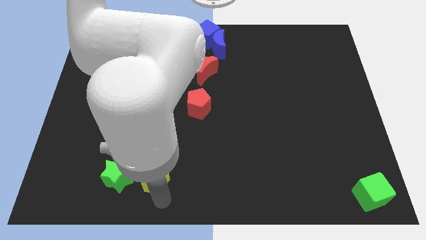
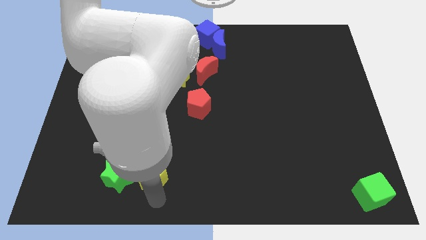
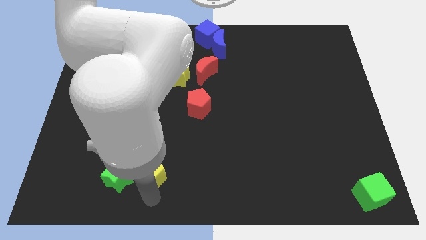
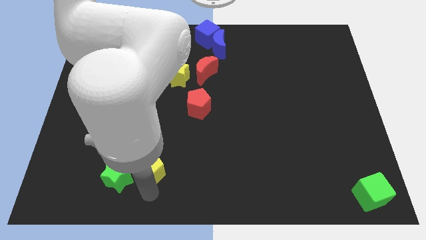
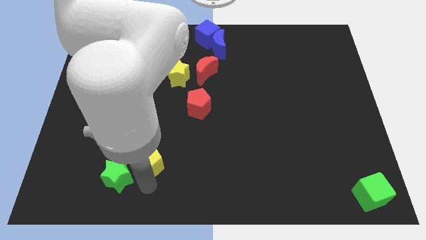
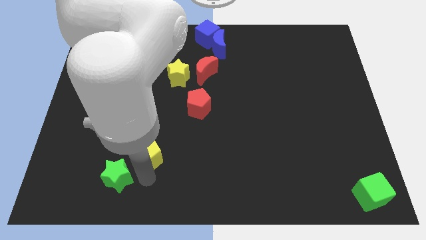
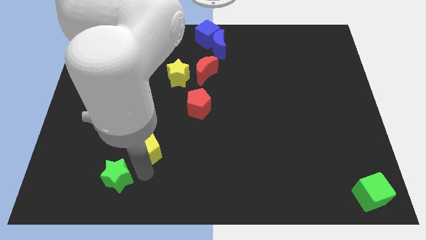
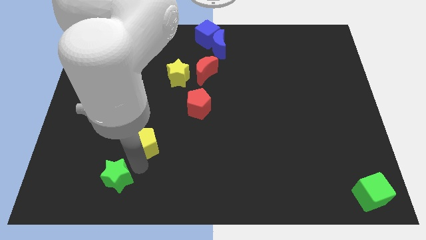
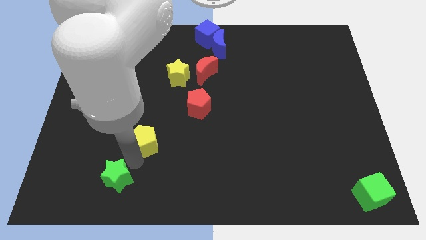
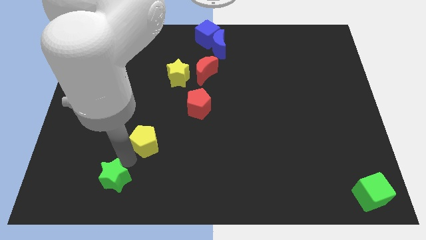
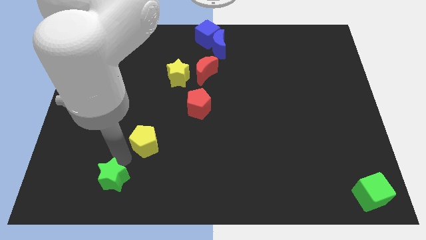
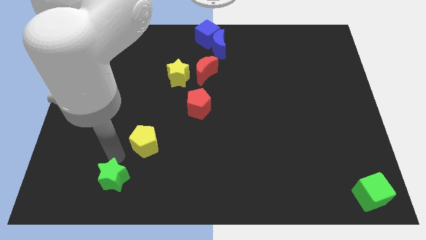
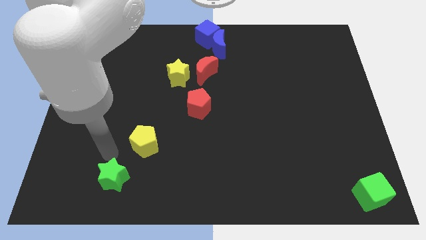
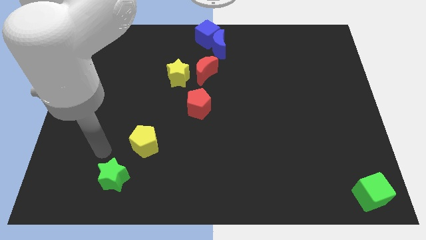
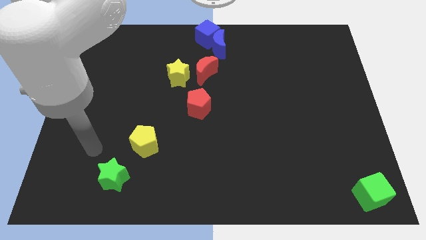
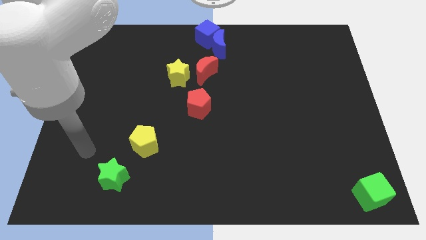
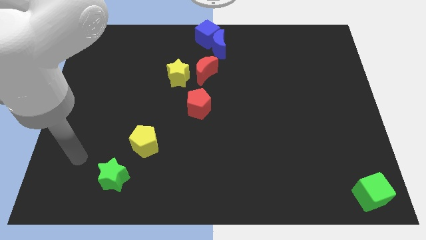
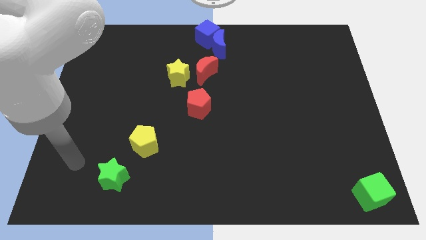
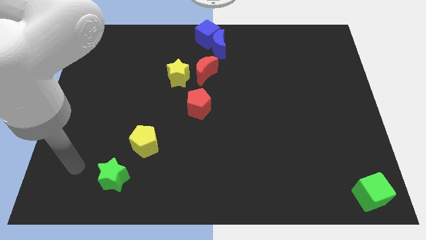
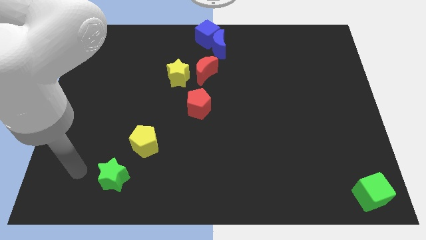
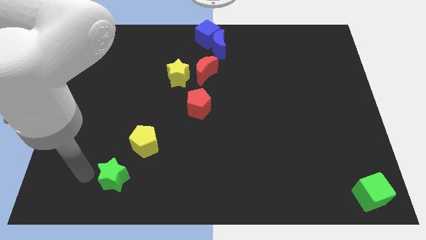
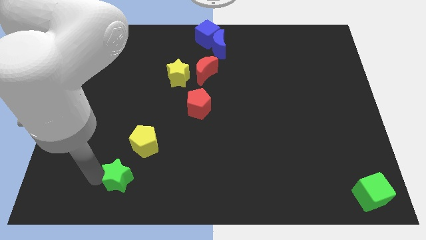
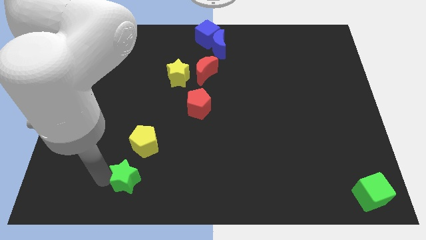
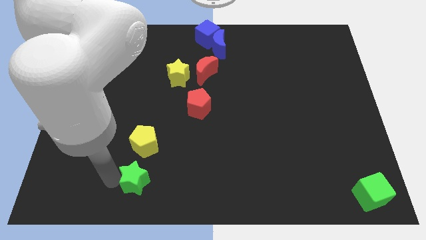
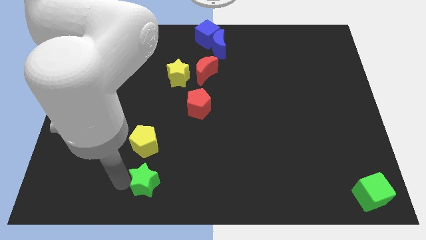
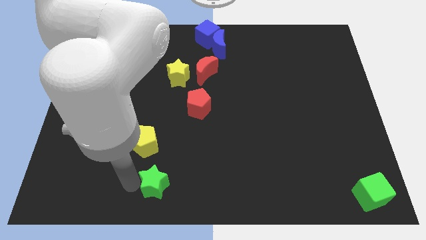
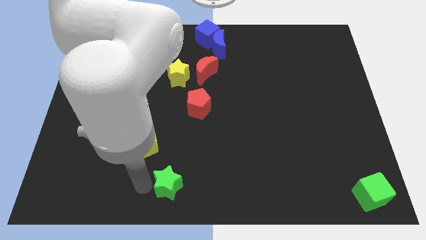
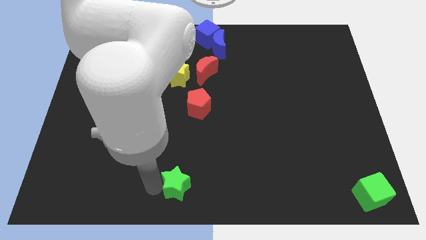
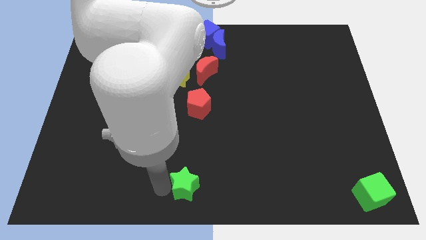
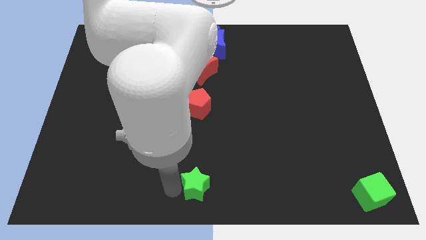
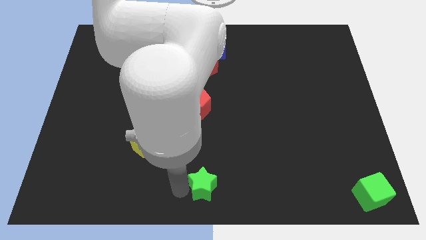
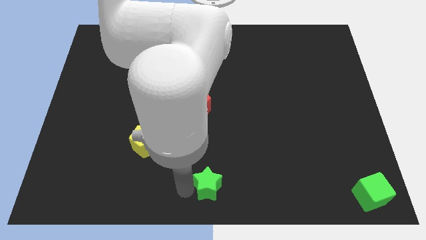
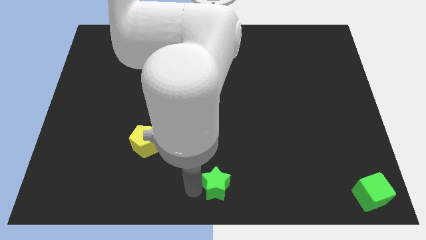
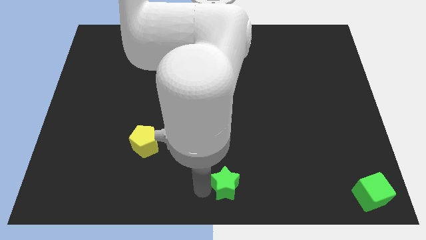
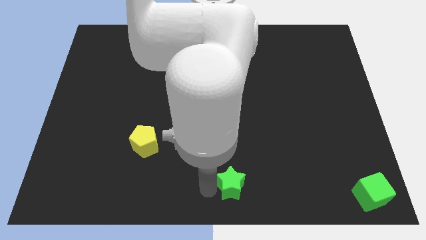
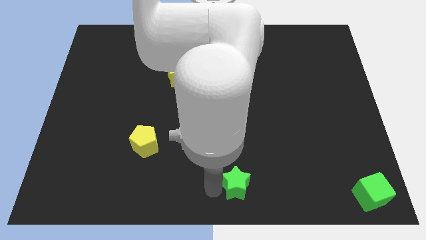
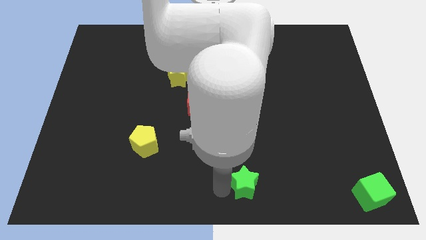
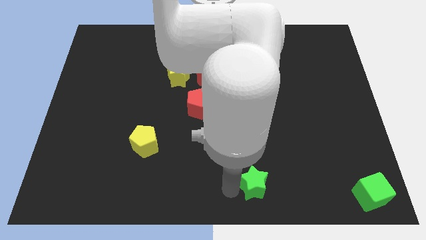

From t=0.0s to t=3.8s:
move the green star to the bottom center of the board

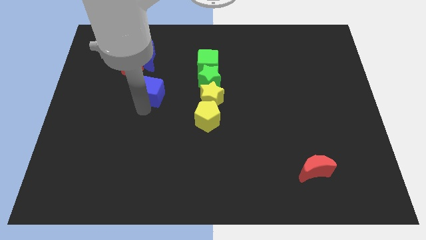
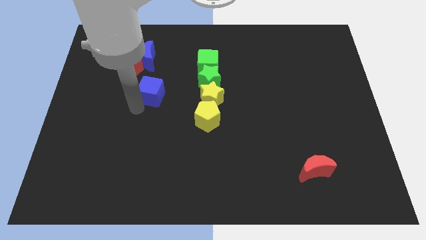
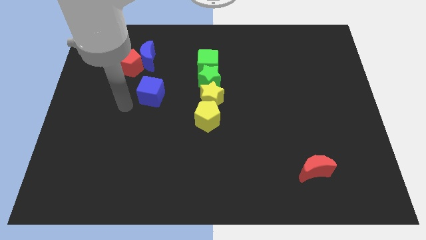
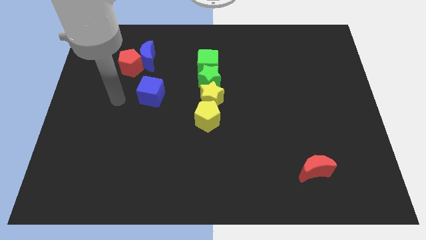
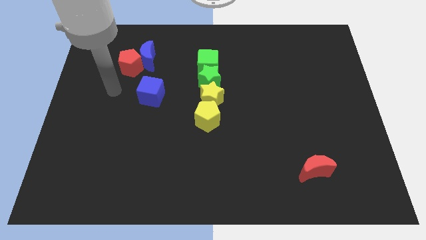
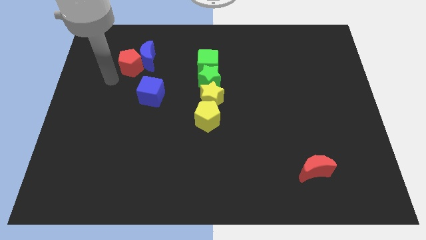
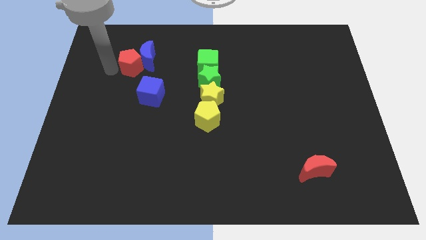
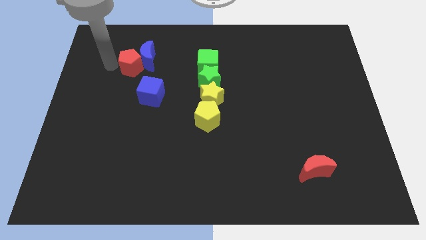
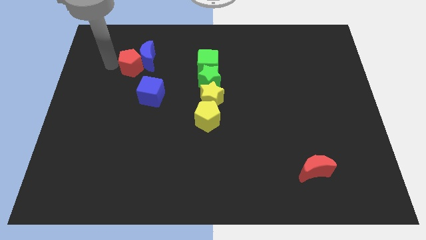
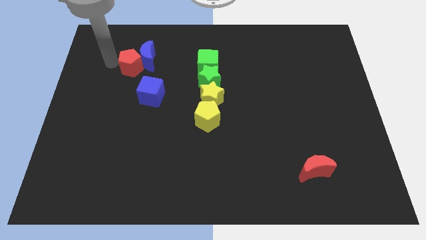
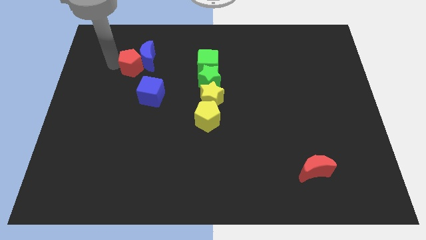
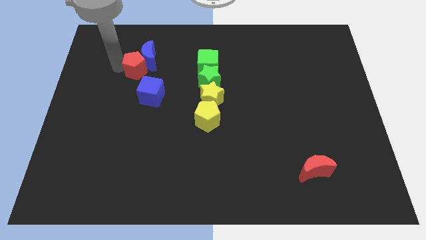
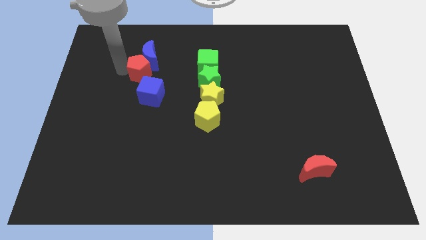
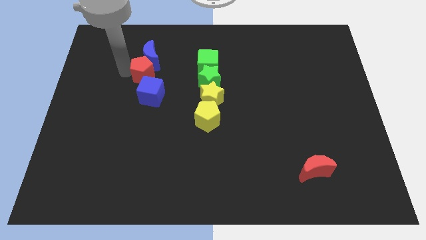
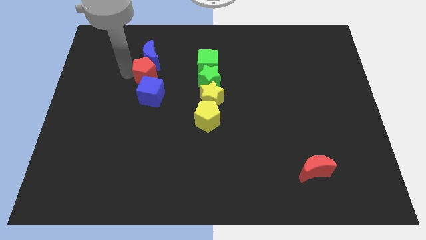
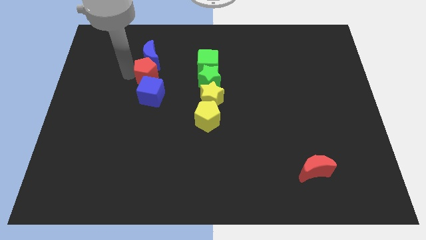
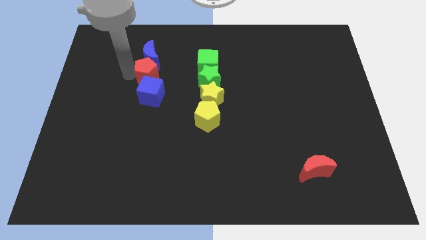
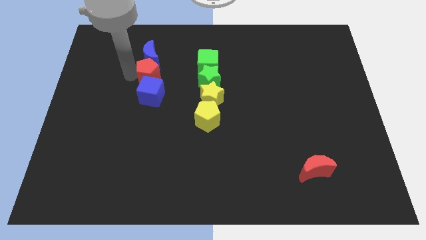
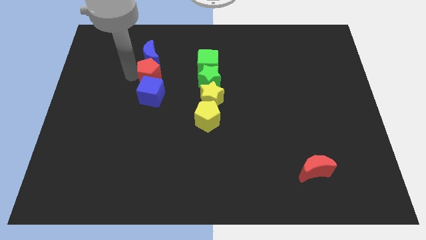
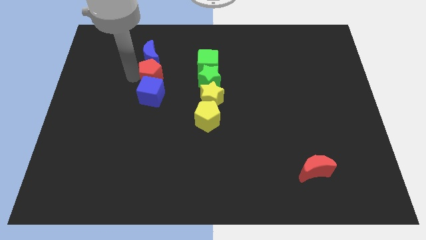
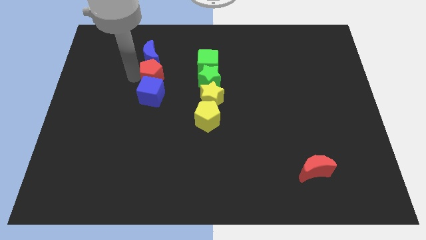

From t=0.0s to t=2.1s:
place the blue cube to the bottom of red pentagon

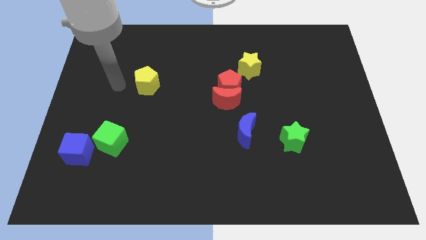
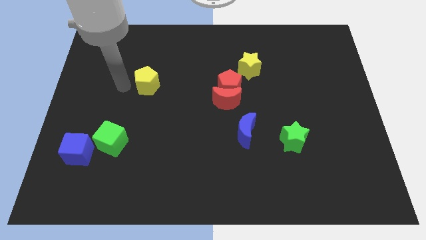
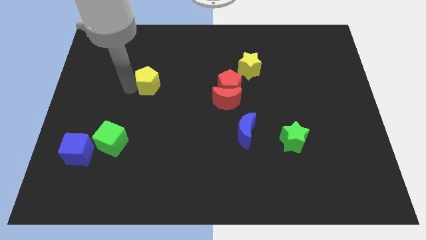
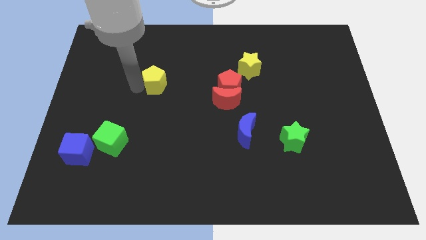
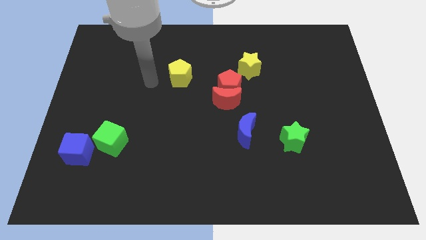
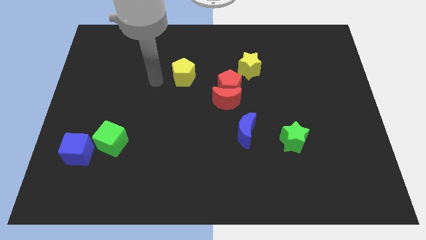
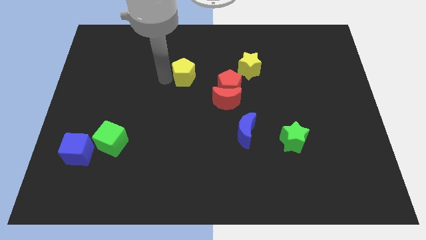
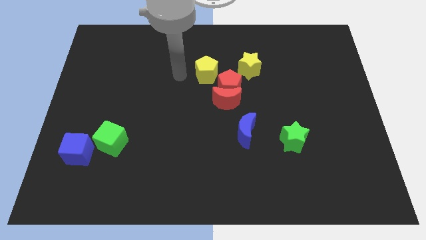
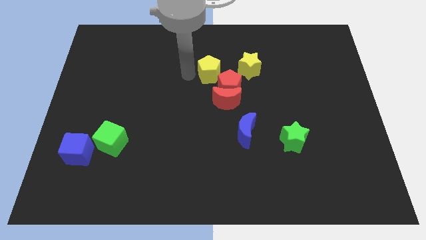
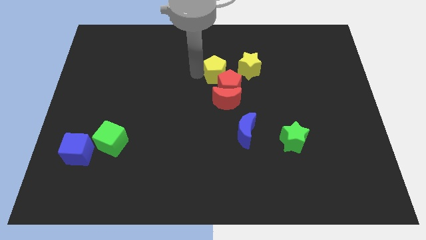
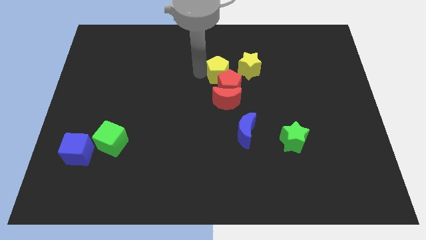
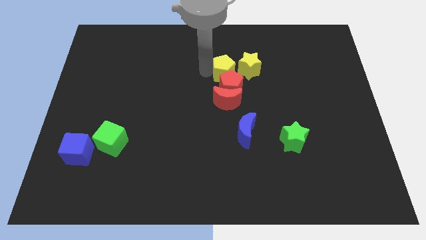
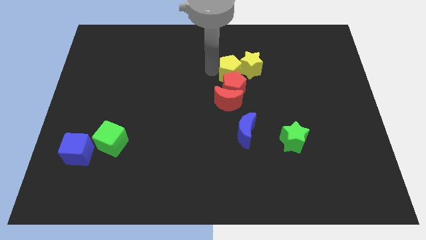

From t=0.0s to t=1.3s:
move the yellow pentagon diagonally top left to the red pentagon

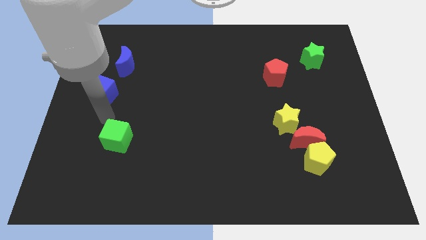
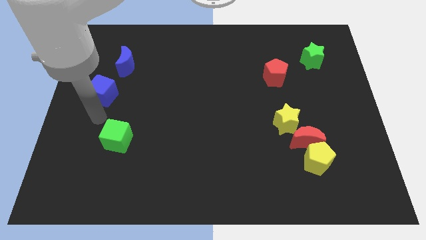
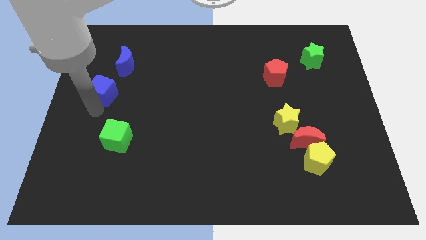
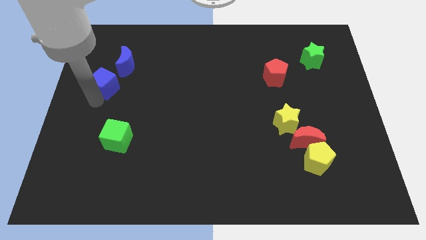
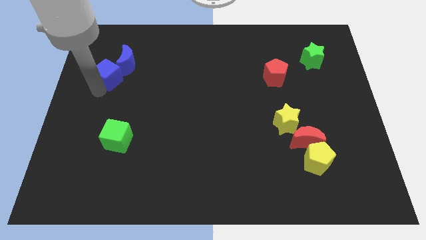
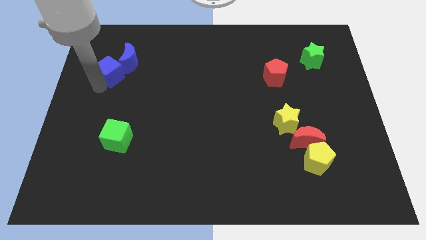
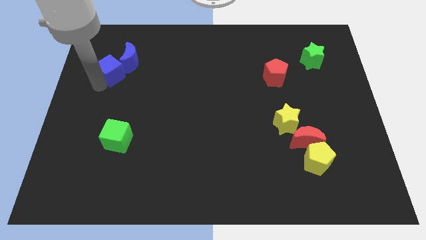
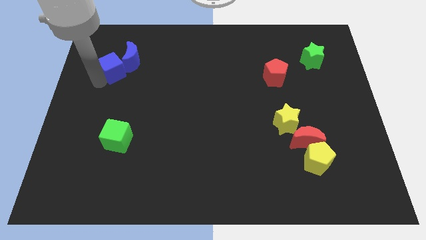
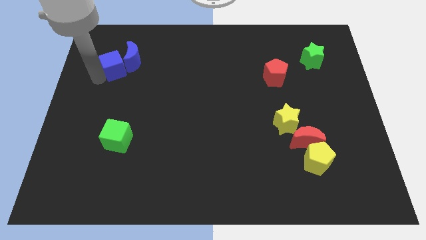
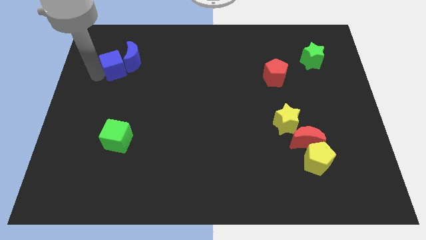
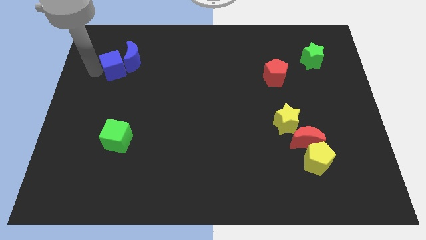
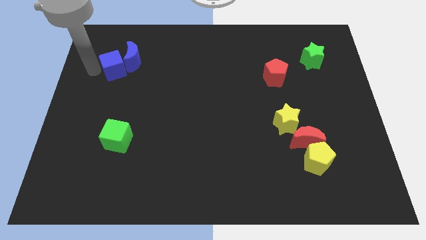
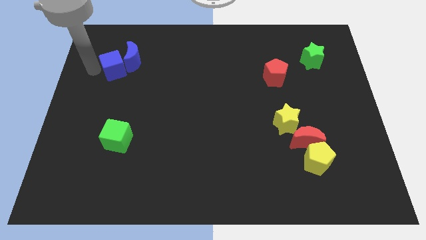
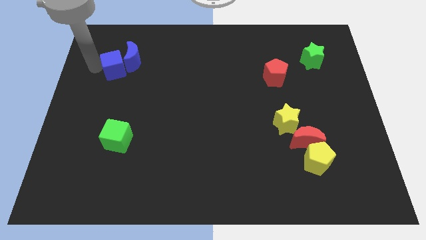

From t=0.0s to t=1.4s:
push blue cube into the blue crescent

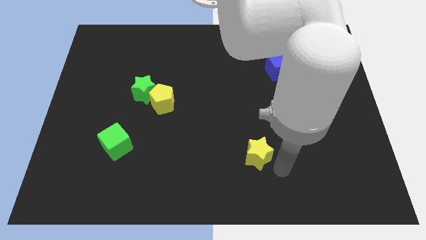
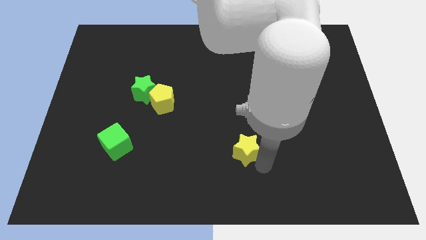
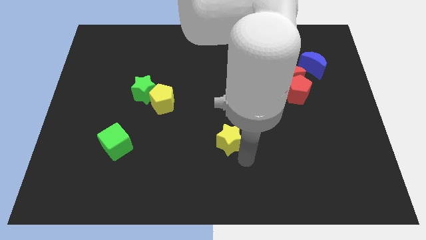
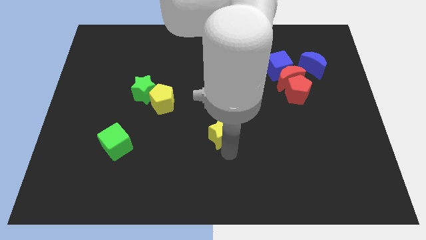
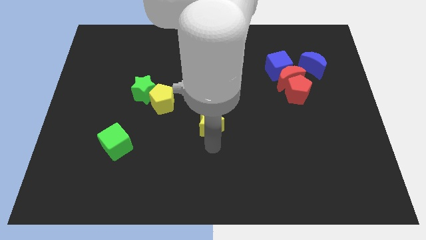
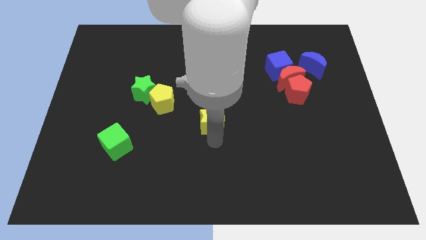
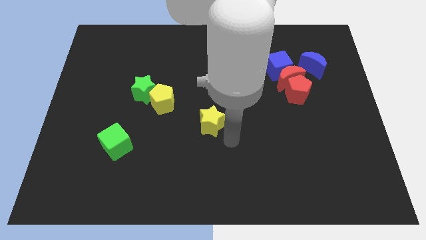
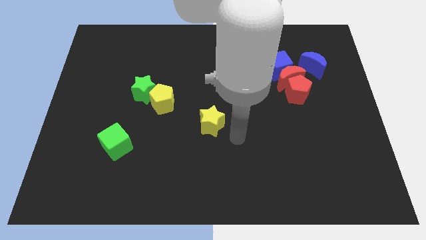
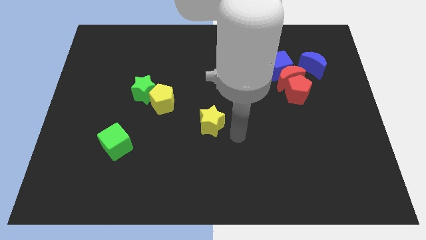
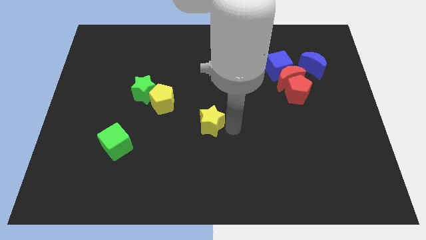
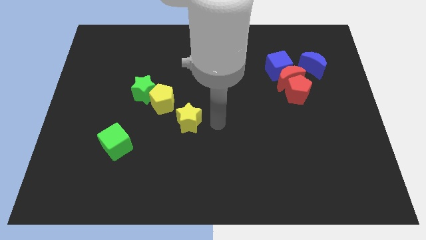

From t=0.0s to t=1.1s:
push yellow star towards yellow pentagon
